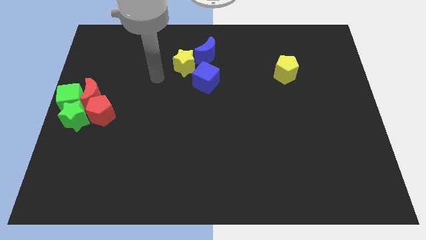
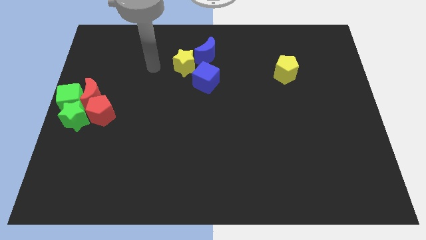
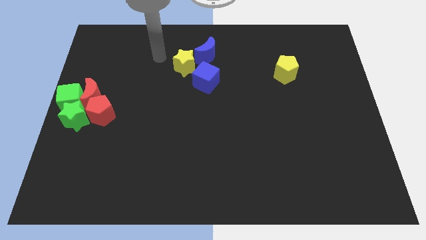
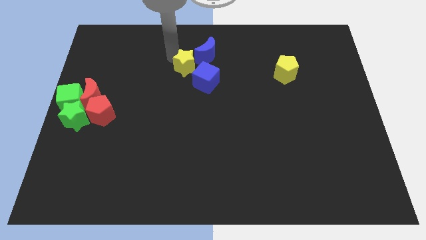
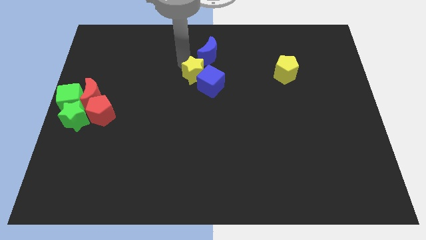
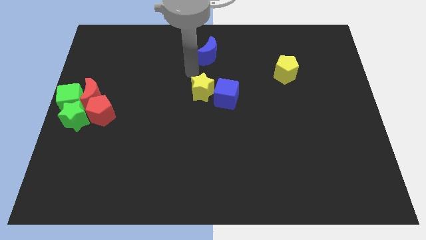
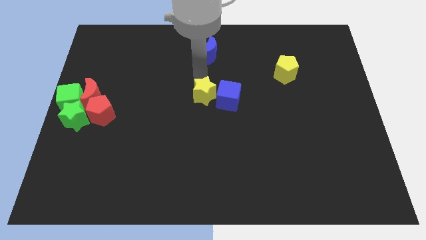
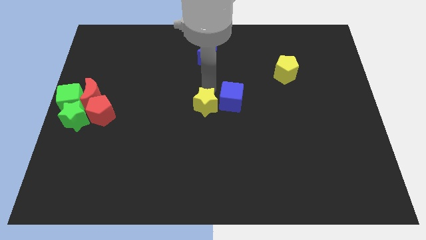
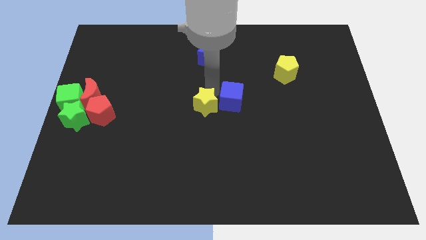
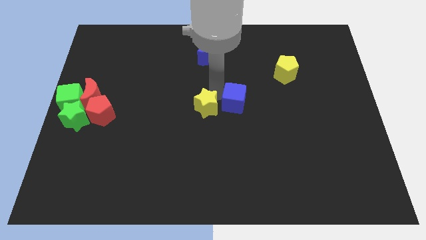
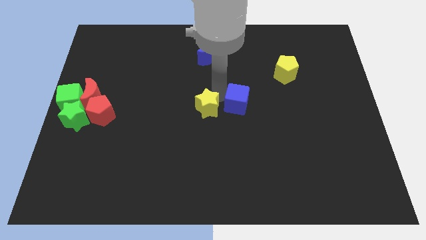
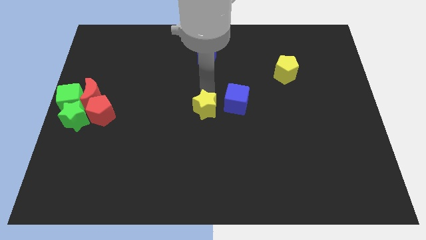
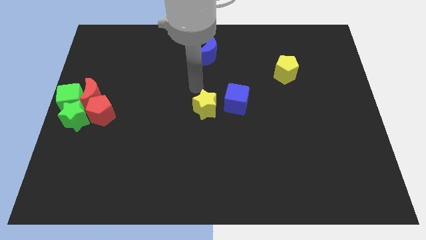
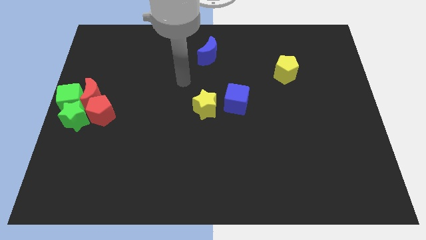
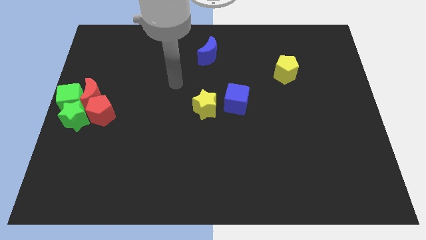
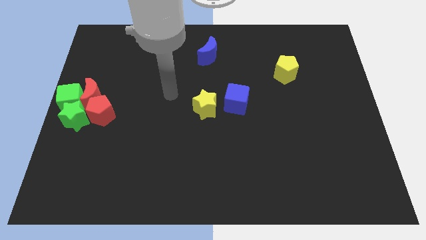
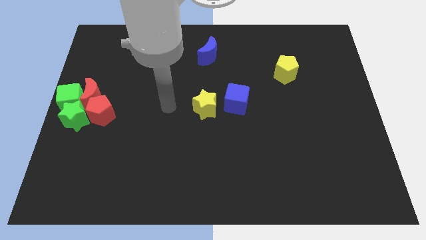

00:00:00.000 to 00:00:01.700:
place yellow star to the center of the board

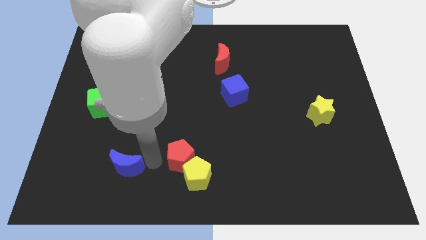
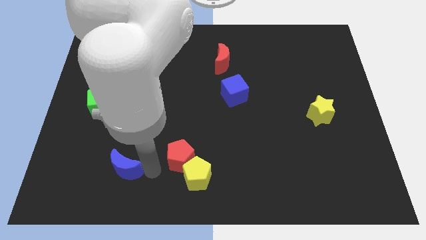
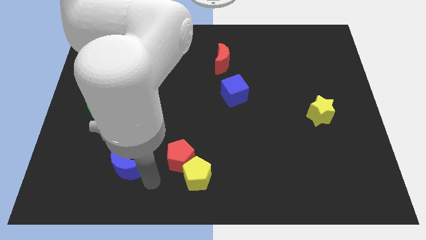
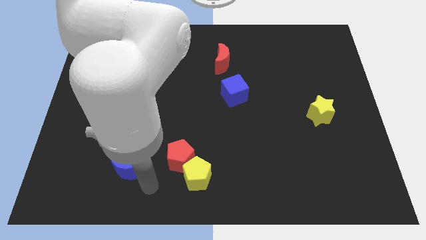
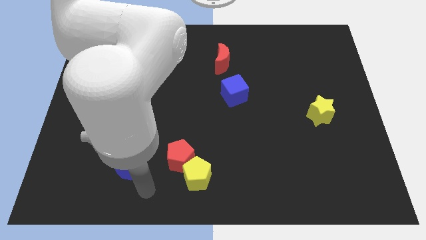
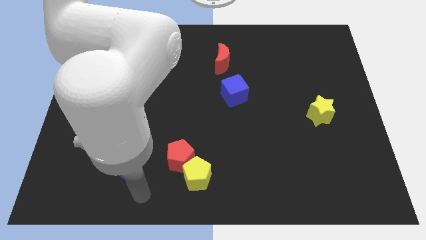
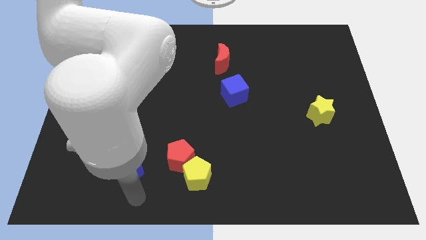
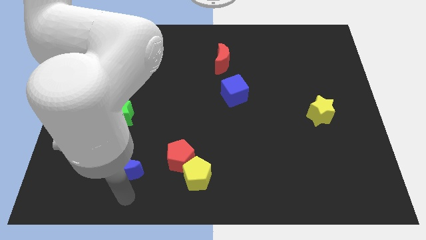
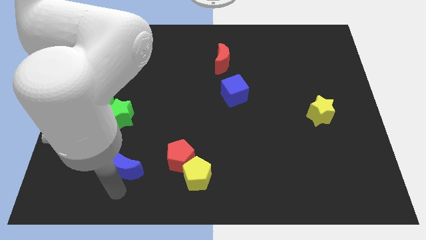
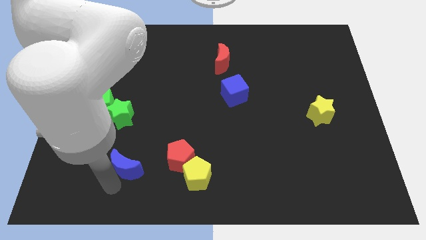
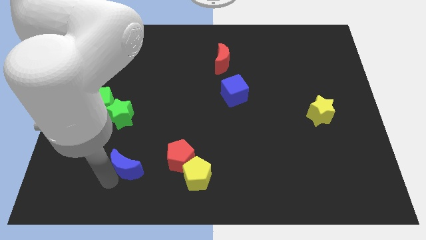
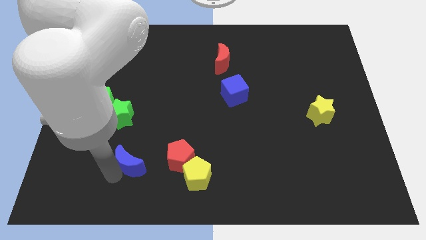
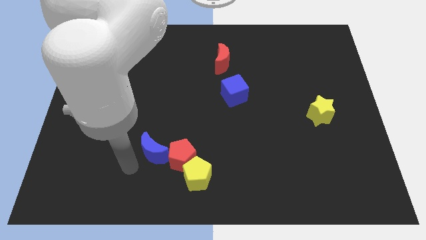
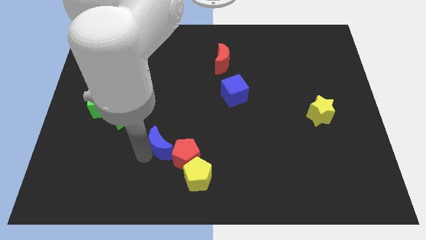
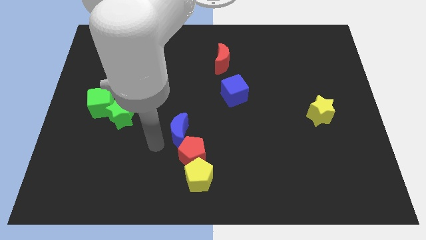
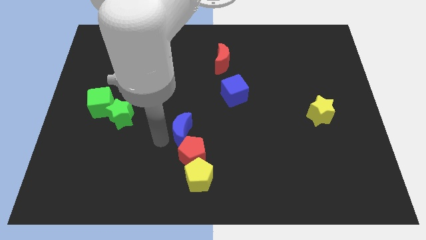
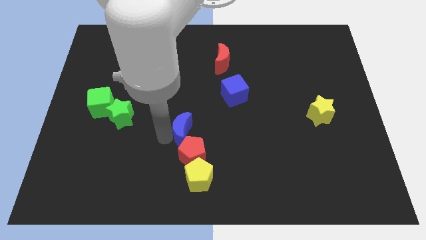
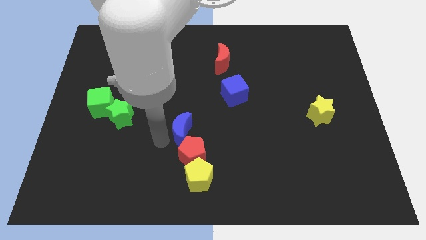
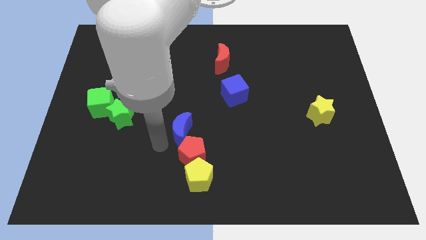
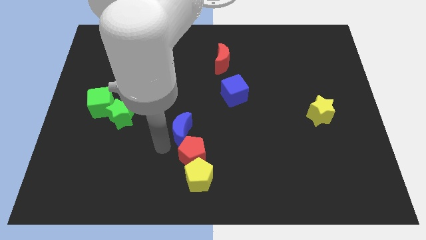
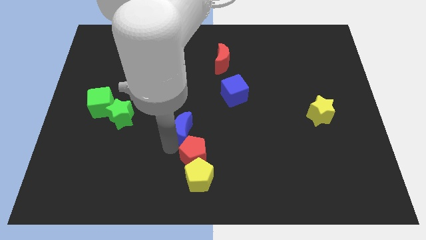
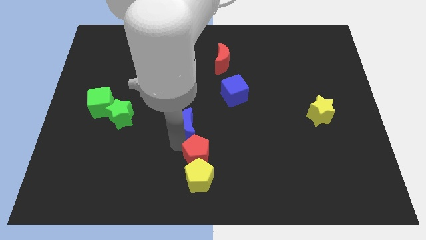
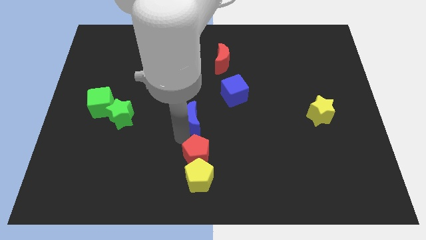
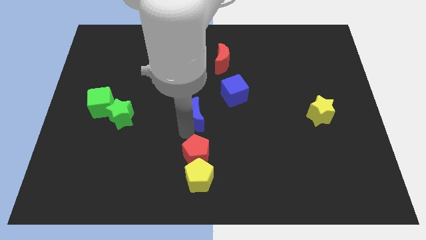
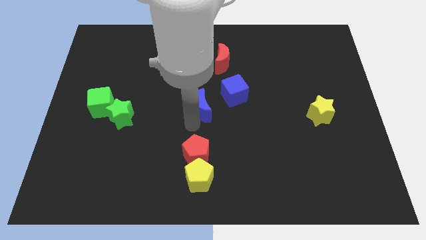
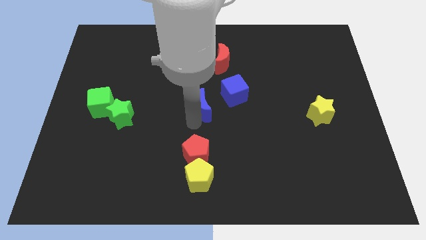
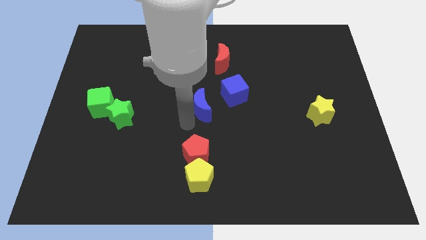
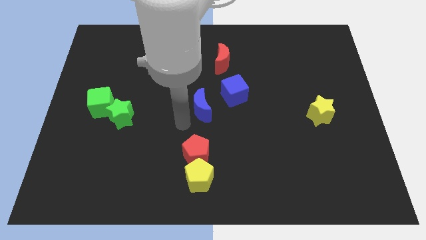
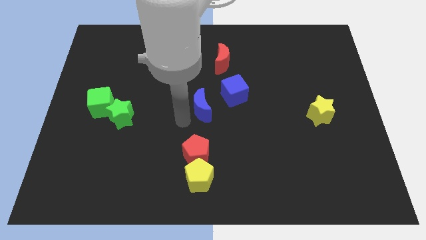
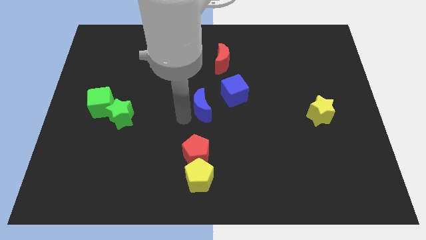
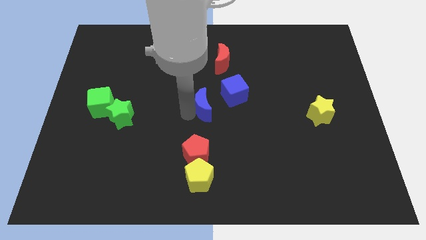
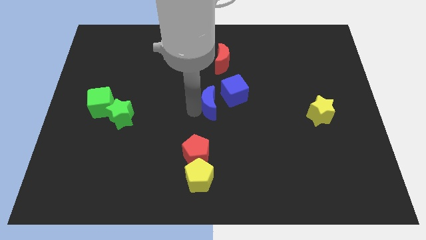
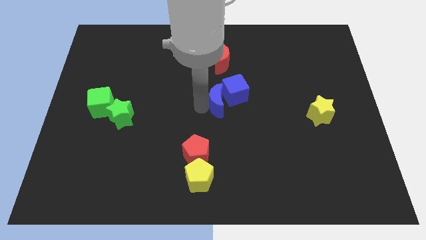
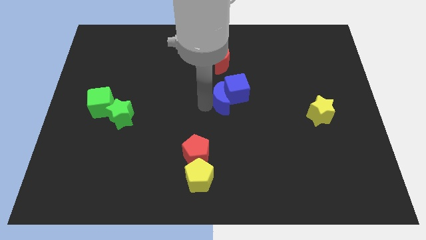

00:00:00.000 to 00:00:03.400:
push the blue crescent into the blue cube

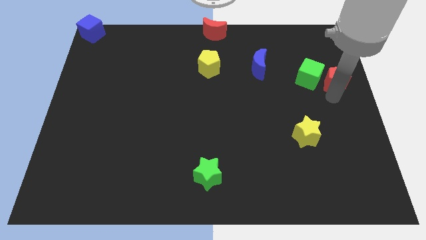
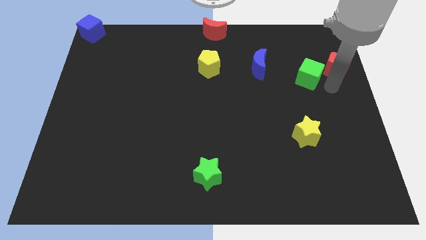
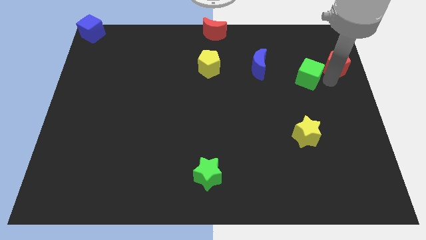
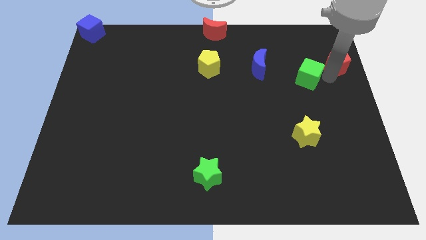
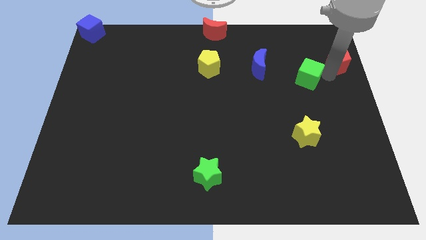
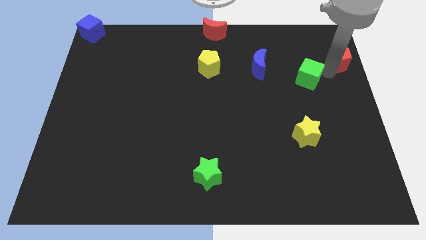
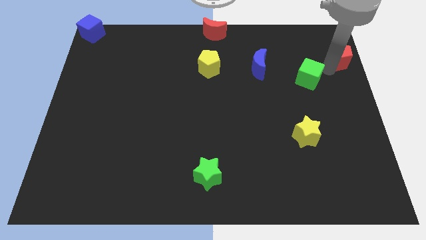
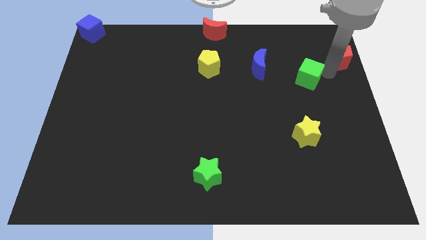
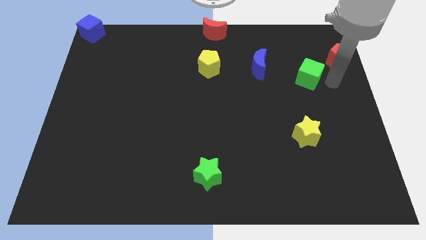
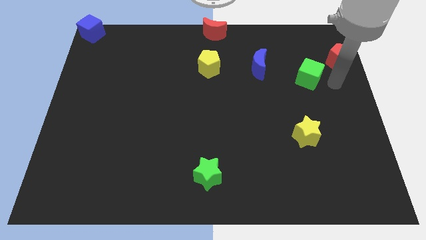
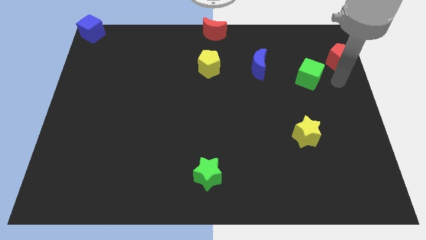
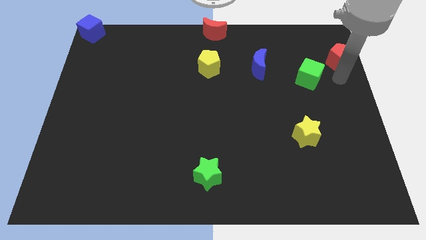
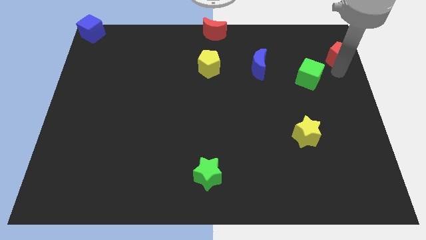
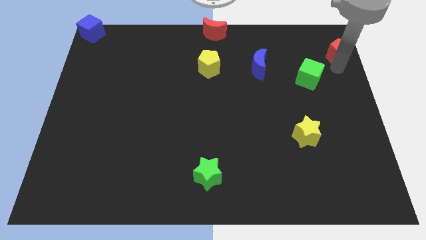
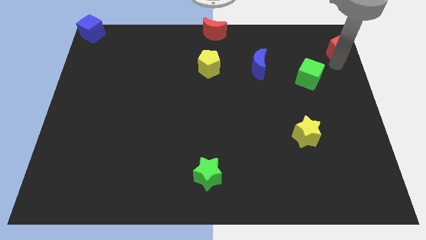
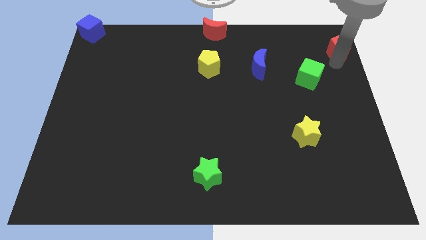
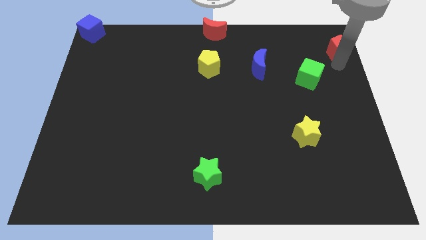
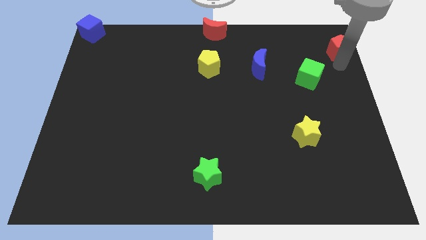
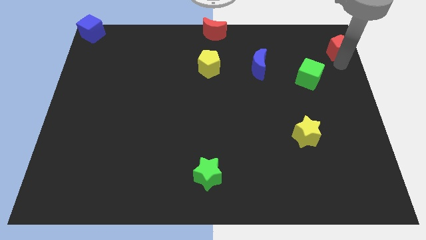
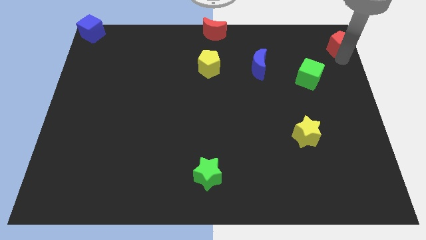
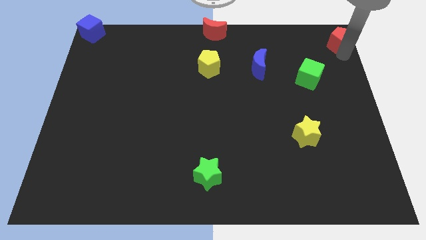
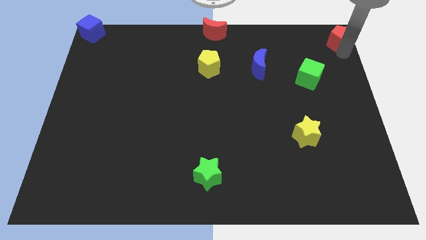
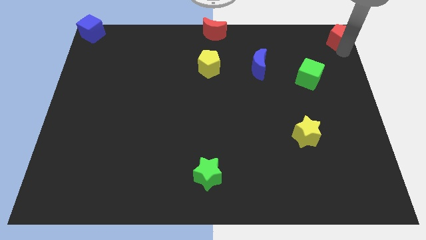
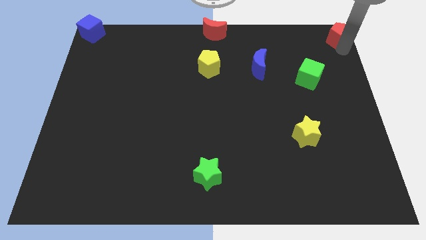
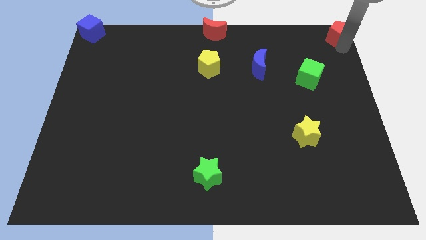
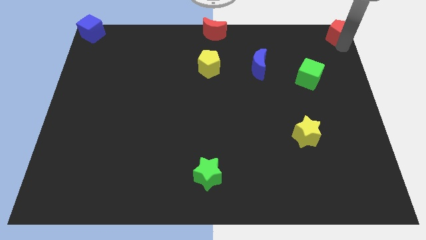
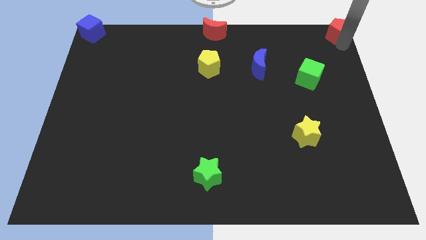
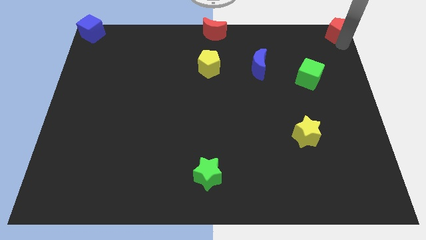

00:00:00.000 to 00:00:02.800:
move the red pentagon to the top right corner side of the board

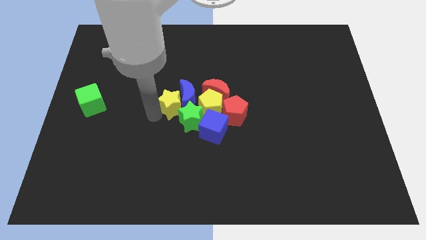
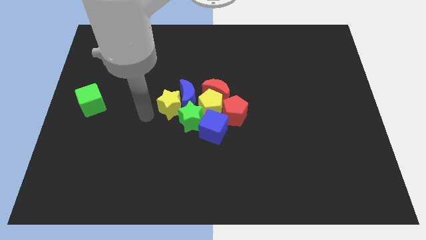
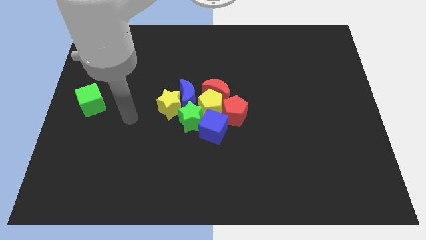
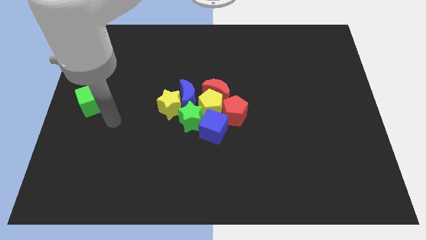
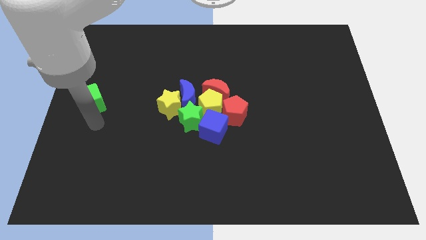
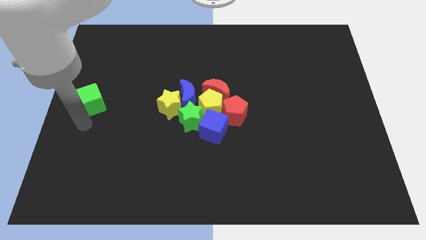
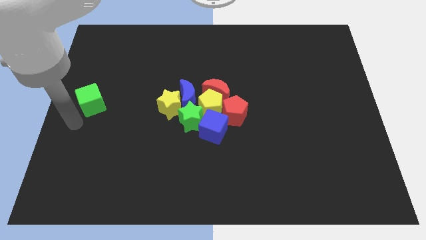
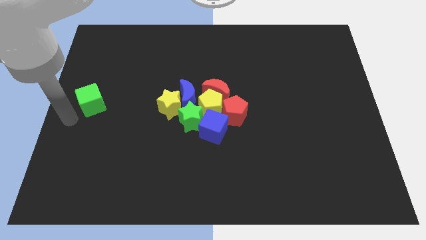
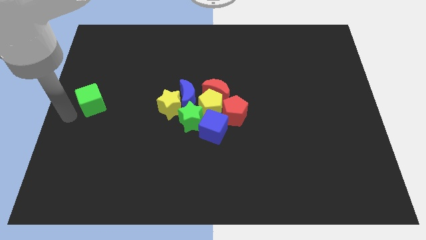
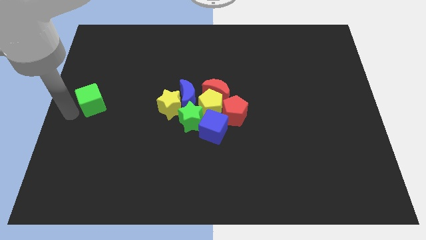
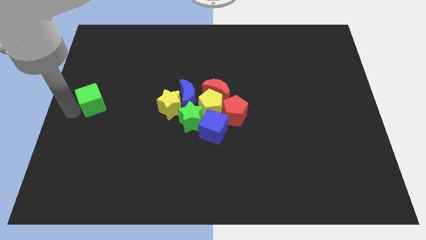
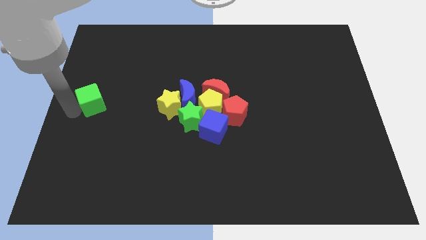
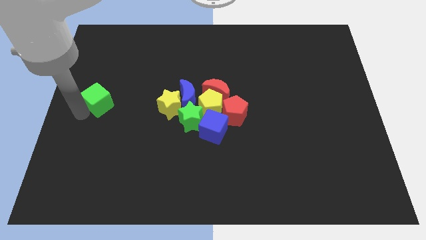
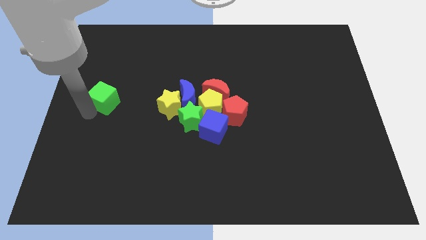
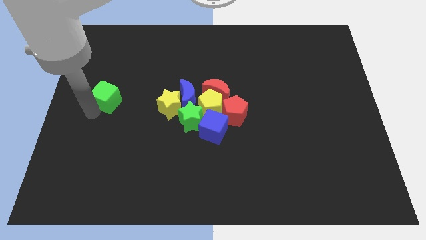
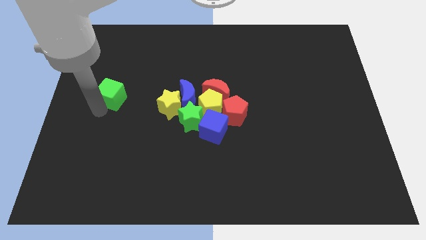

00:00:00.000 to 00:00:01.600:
move the green cube slightly to the right
